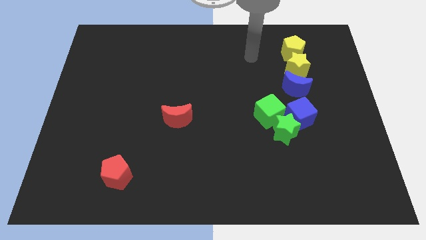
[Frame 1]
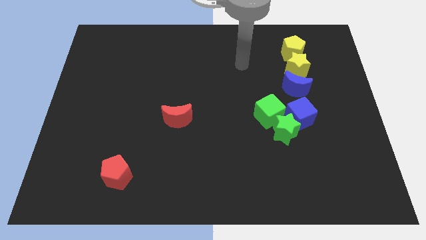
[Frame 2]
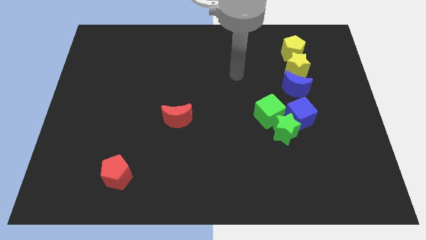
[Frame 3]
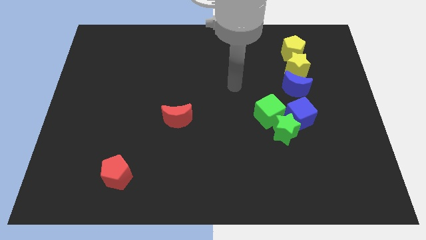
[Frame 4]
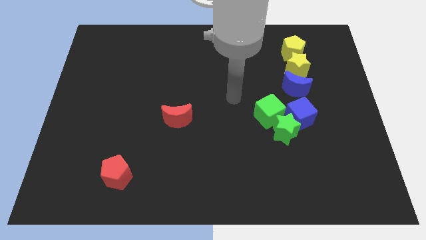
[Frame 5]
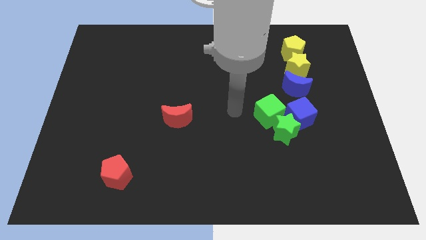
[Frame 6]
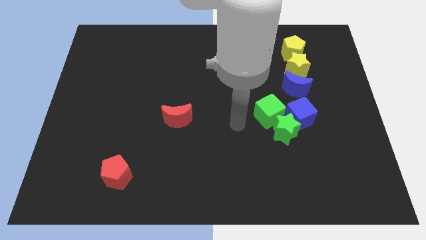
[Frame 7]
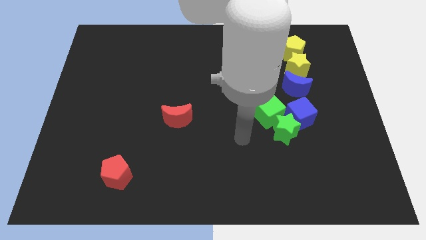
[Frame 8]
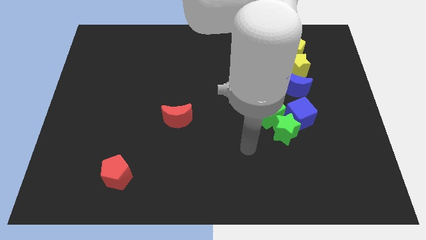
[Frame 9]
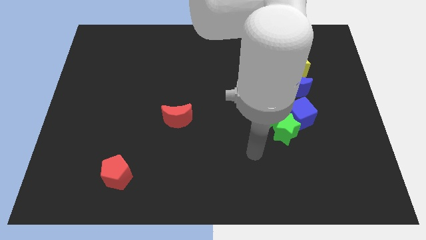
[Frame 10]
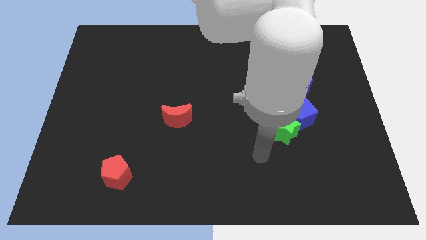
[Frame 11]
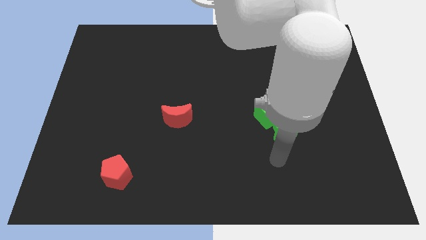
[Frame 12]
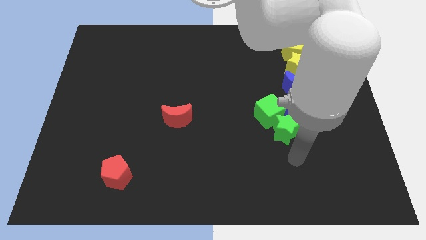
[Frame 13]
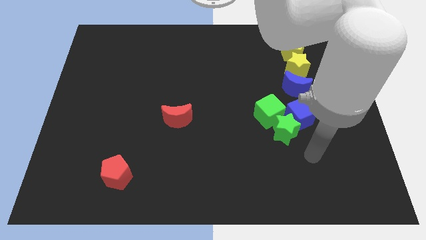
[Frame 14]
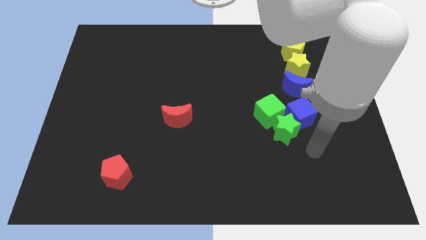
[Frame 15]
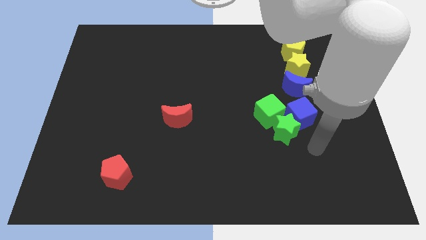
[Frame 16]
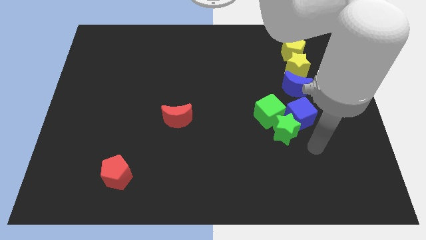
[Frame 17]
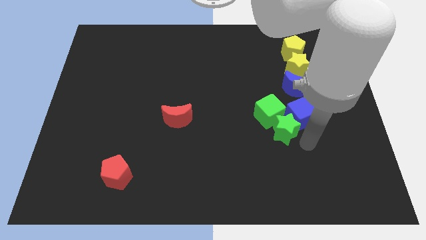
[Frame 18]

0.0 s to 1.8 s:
move the arm below blue cube

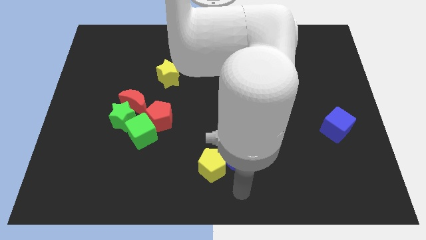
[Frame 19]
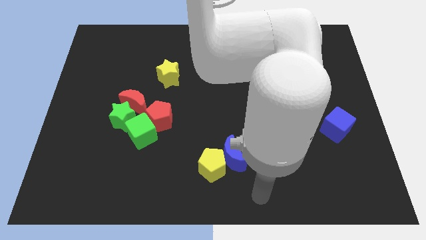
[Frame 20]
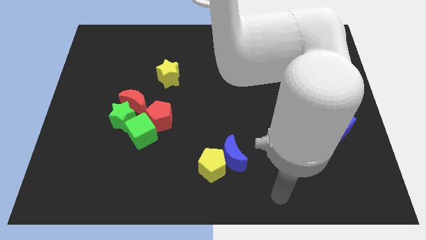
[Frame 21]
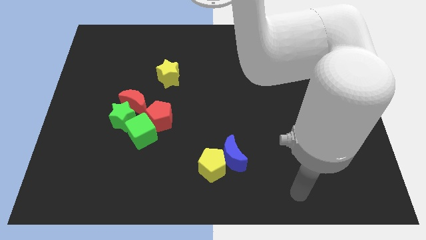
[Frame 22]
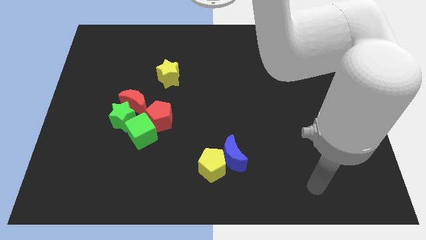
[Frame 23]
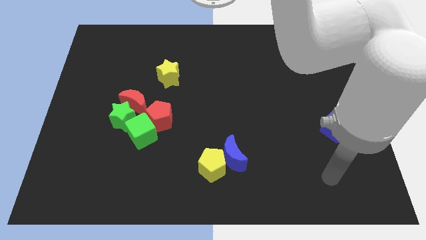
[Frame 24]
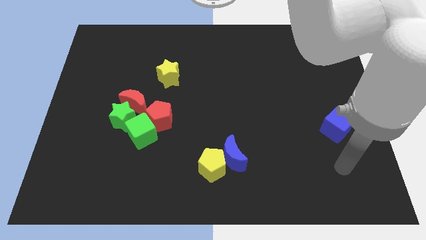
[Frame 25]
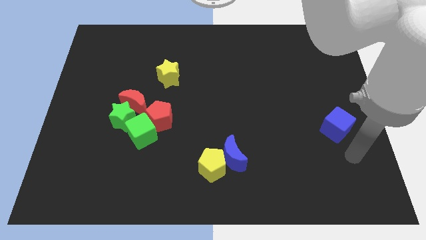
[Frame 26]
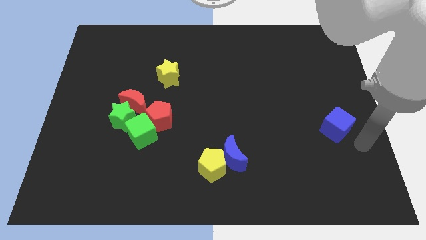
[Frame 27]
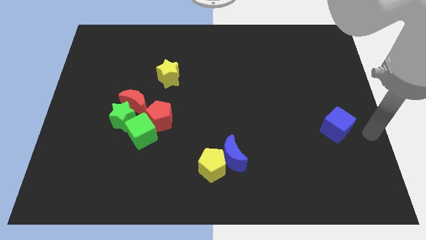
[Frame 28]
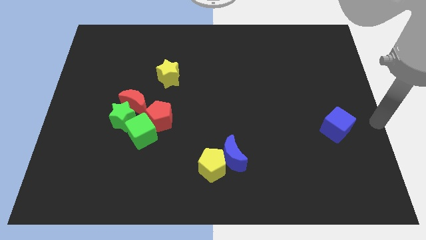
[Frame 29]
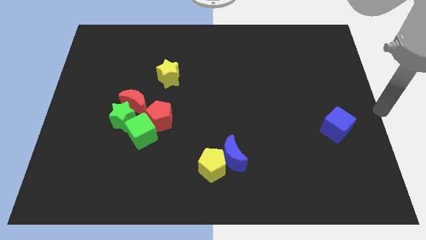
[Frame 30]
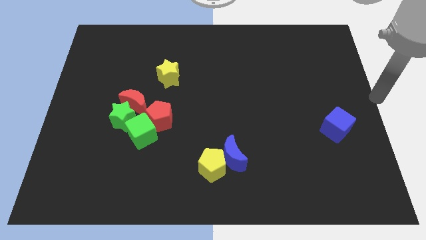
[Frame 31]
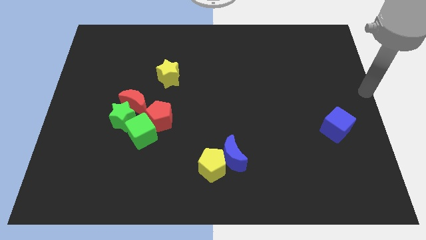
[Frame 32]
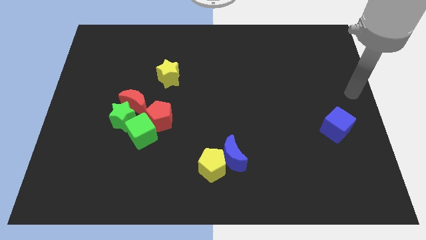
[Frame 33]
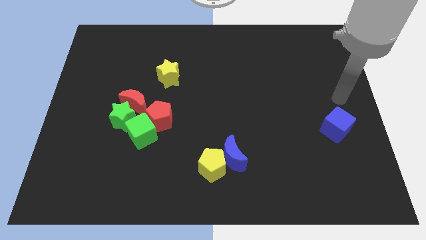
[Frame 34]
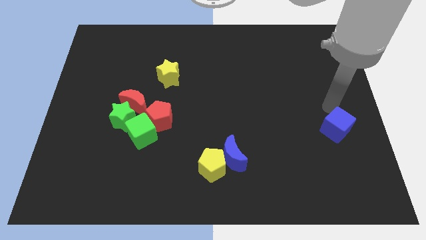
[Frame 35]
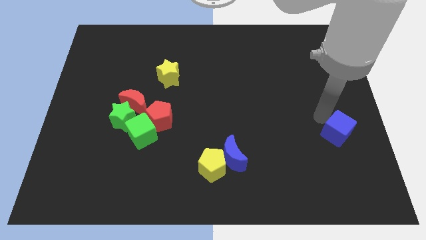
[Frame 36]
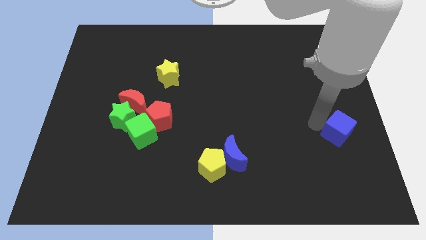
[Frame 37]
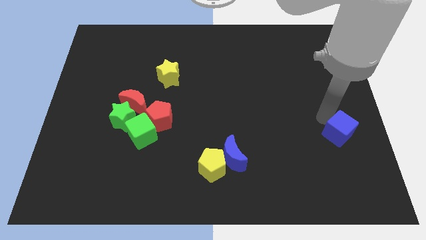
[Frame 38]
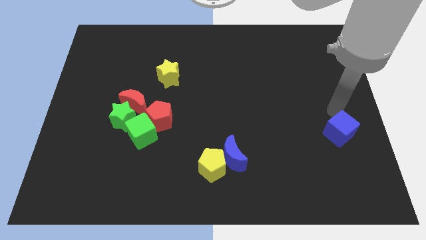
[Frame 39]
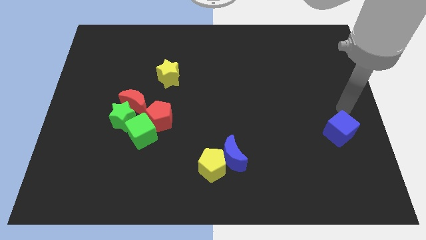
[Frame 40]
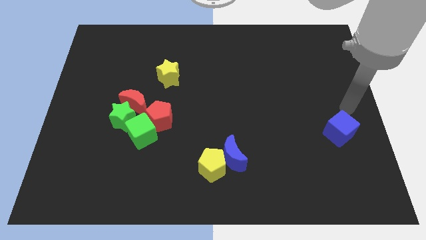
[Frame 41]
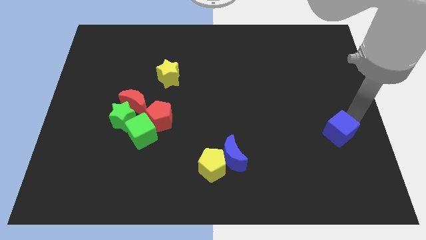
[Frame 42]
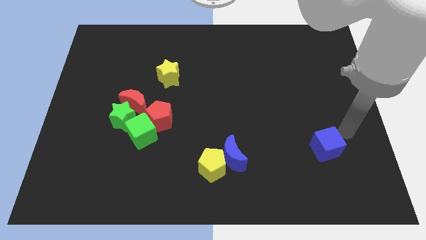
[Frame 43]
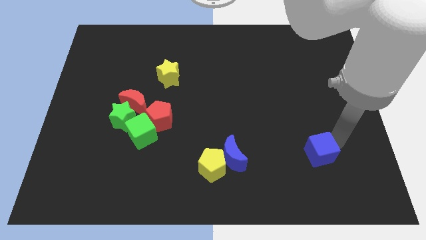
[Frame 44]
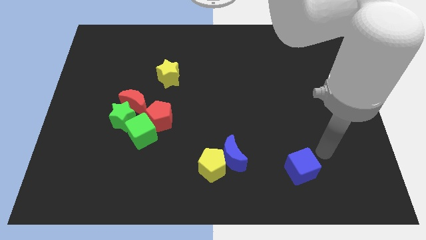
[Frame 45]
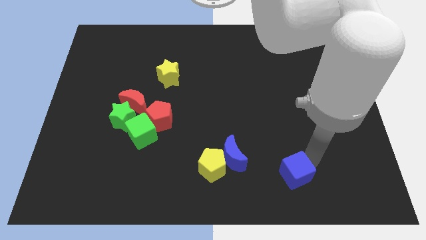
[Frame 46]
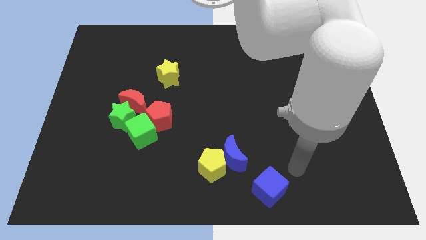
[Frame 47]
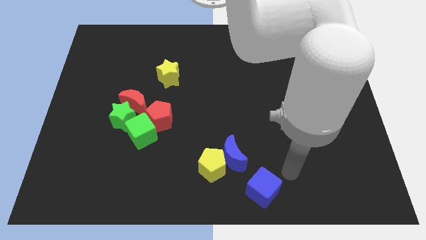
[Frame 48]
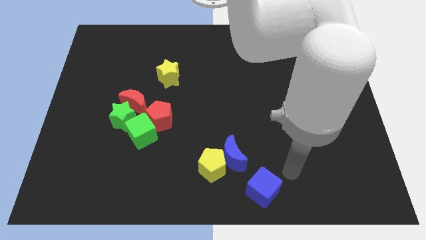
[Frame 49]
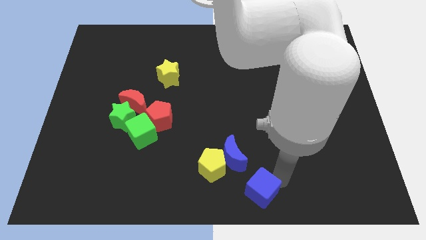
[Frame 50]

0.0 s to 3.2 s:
move the blue cube to the bottom right side of the blue crescent

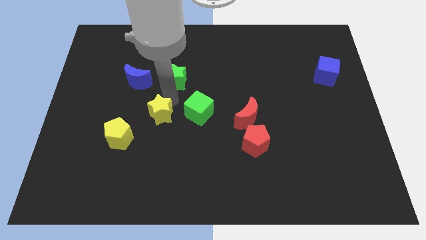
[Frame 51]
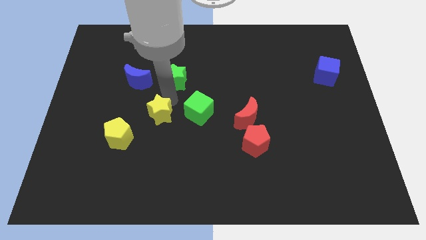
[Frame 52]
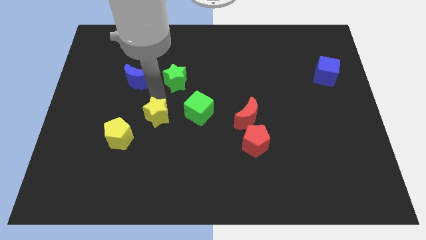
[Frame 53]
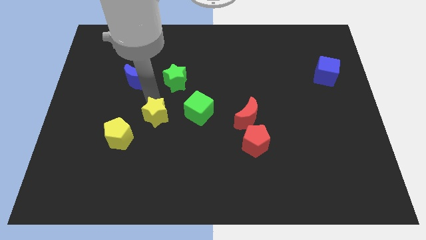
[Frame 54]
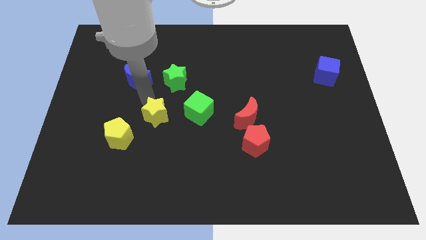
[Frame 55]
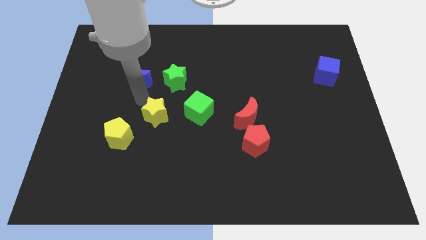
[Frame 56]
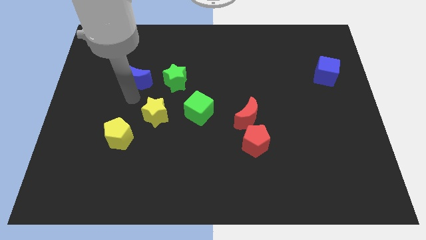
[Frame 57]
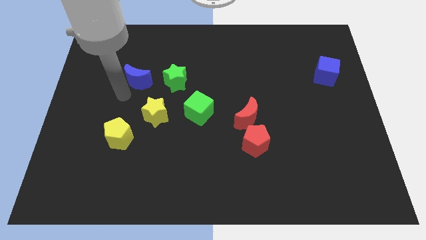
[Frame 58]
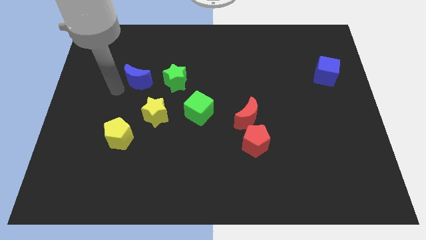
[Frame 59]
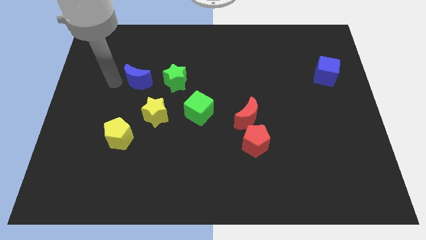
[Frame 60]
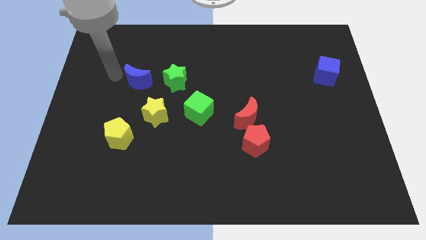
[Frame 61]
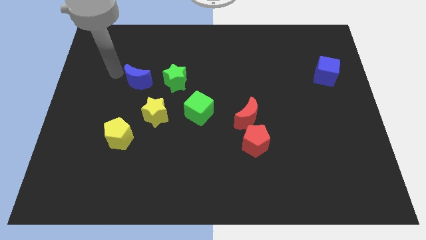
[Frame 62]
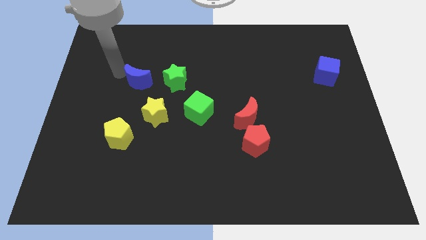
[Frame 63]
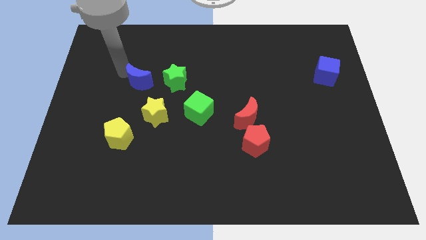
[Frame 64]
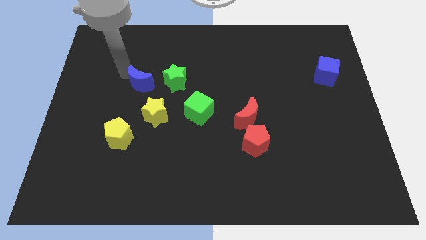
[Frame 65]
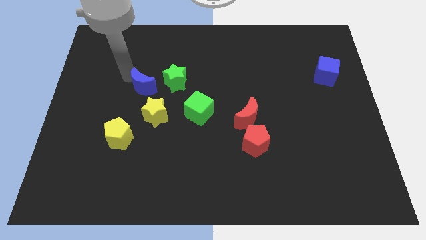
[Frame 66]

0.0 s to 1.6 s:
move your arm towards the blue crescent

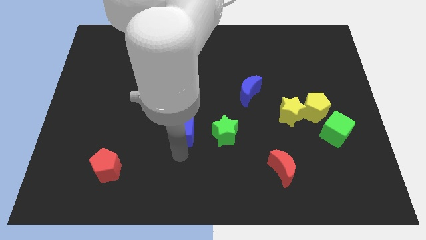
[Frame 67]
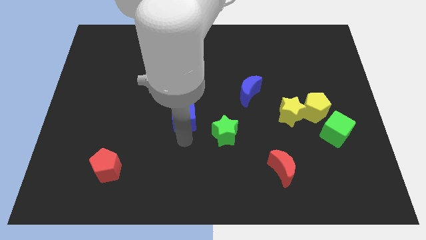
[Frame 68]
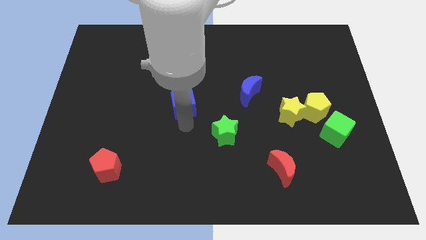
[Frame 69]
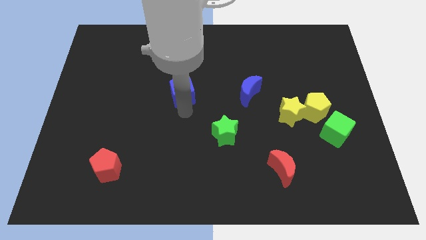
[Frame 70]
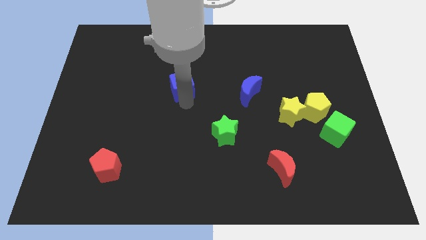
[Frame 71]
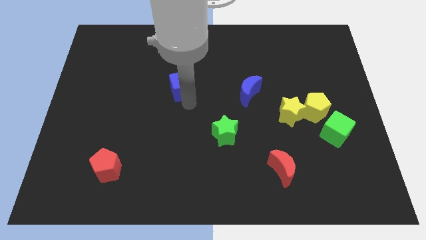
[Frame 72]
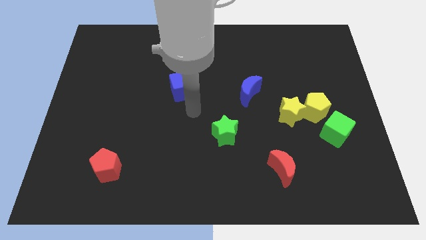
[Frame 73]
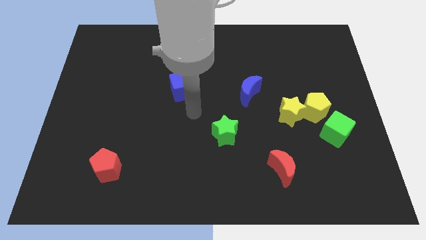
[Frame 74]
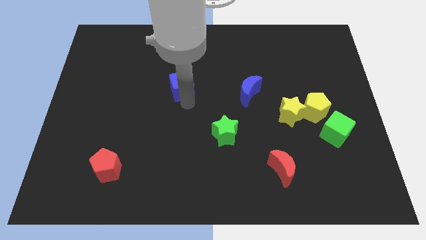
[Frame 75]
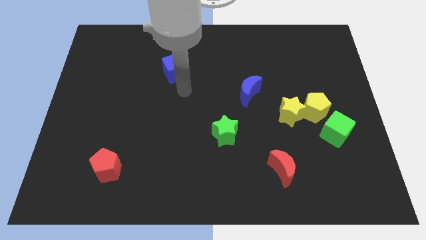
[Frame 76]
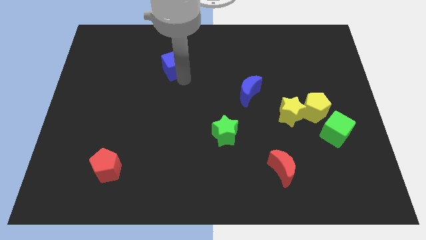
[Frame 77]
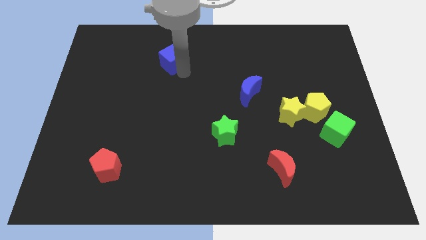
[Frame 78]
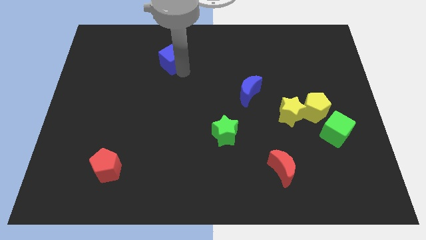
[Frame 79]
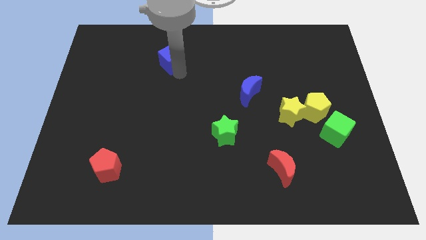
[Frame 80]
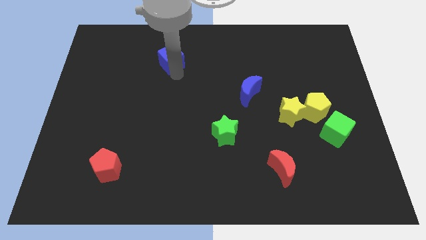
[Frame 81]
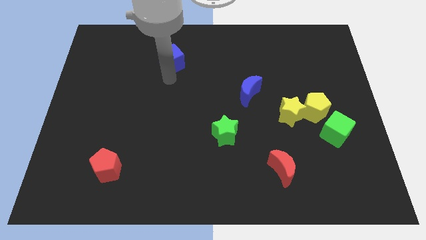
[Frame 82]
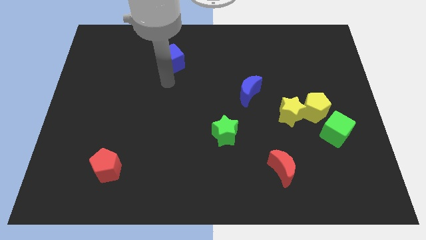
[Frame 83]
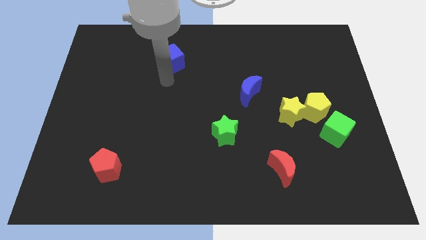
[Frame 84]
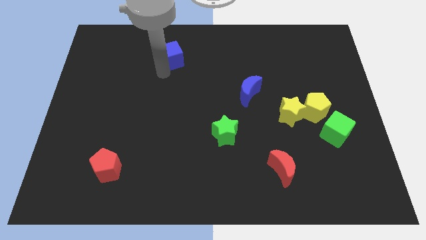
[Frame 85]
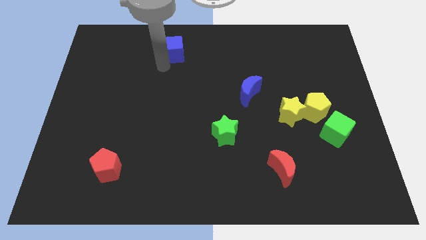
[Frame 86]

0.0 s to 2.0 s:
move the blue cube towards the top center

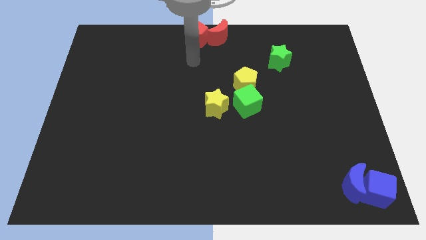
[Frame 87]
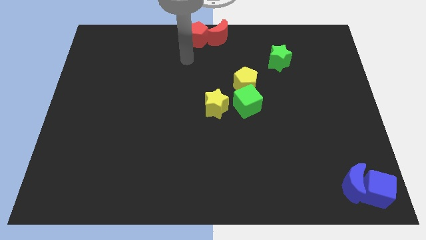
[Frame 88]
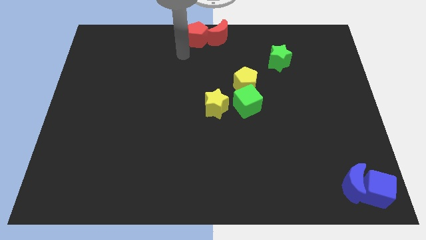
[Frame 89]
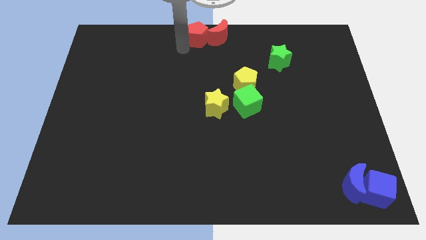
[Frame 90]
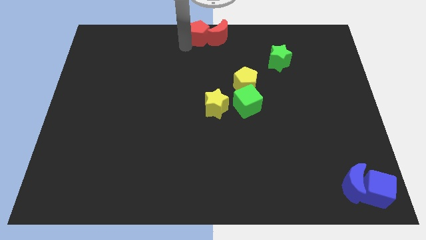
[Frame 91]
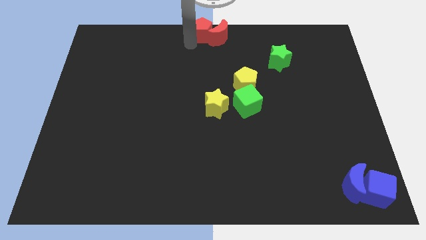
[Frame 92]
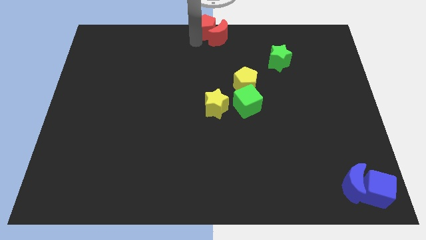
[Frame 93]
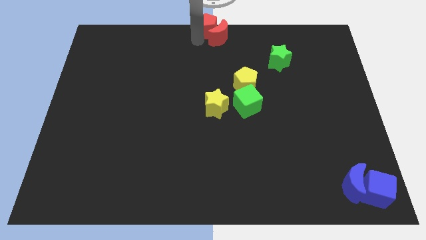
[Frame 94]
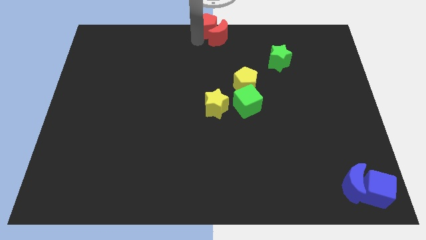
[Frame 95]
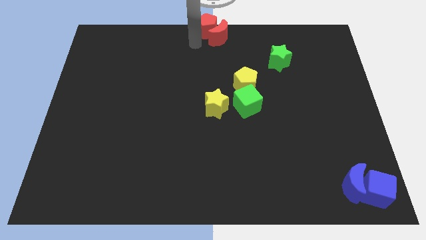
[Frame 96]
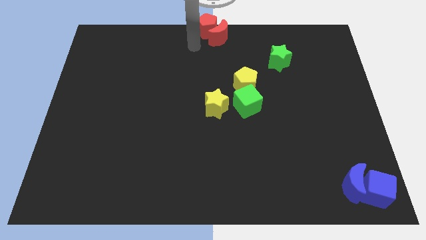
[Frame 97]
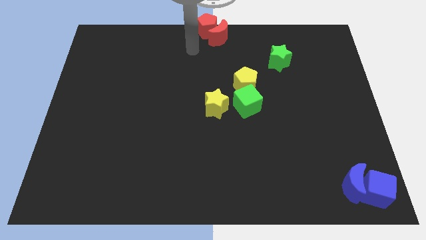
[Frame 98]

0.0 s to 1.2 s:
push red pentagon to the top center of the board
